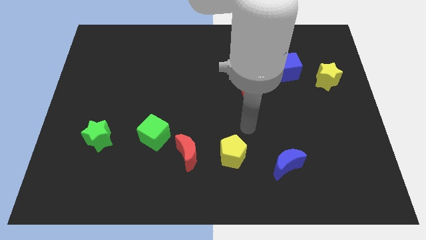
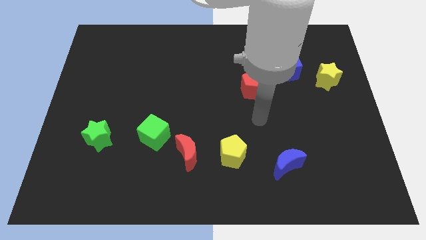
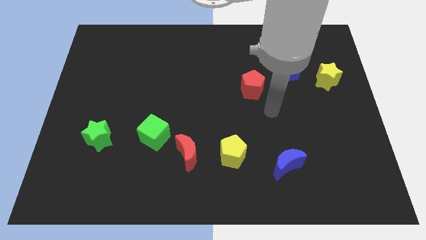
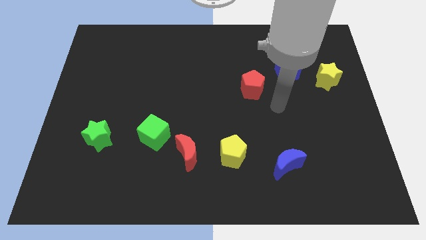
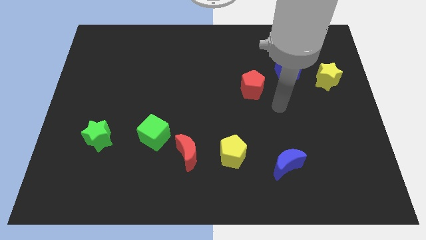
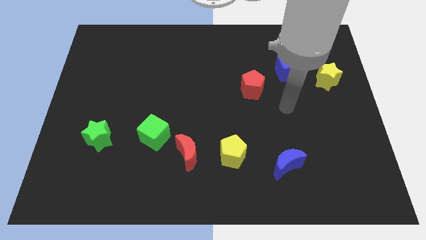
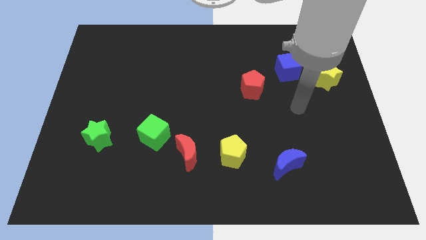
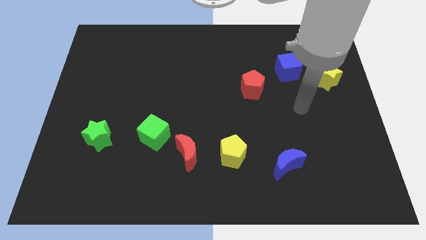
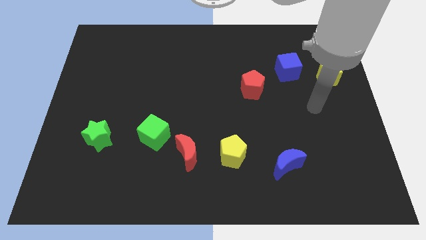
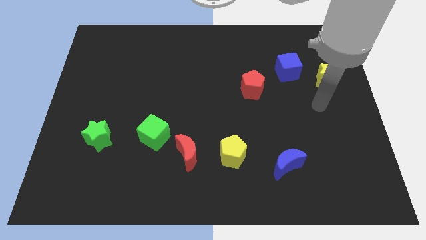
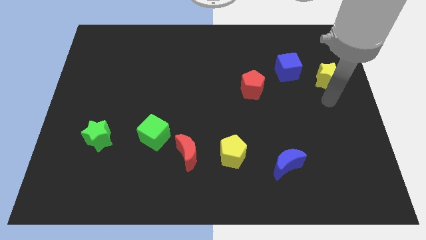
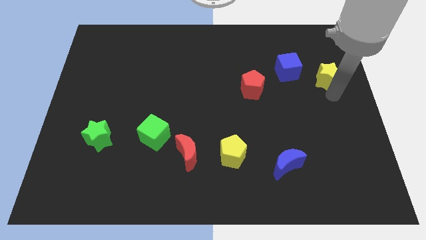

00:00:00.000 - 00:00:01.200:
move close to the yellow star

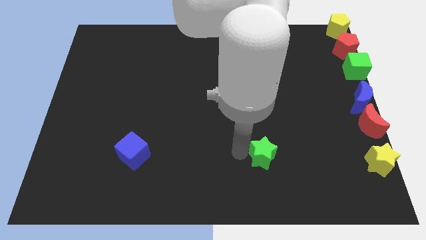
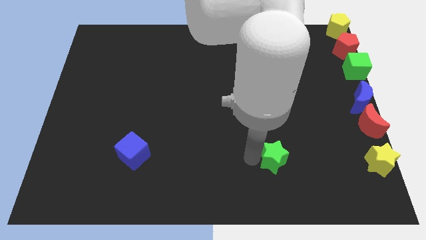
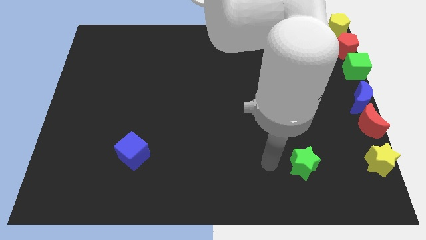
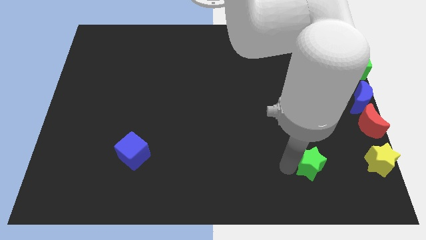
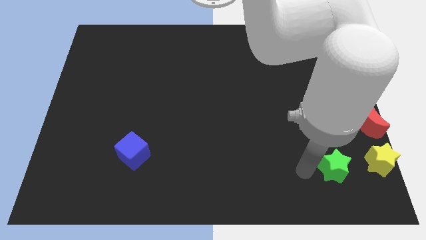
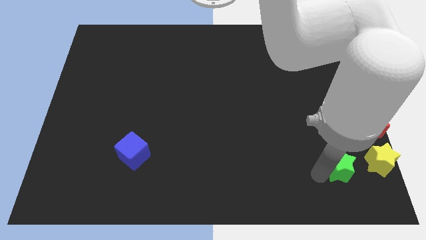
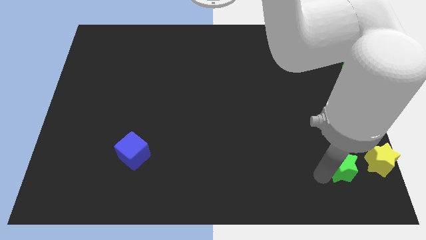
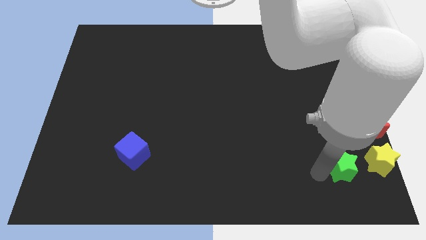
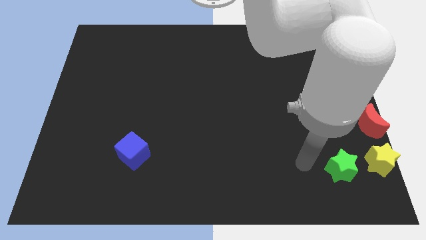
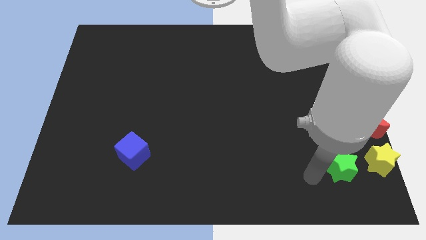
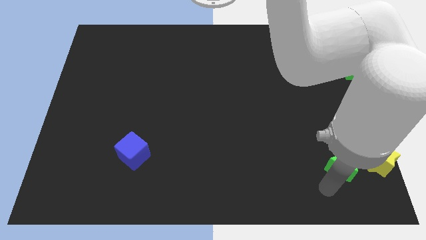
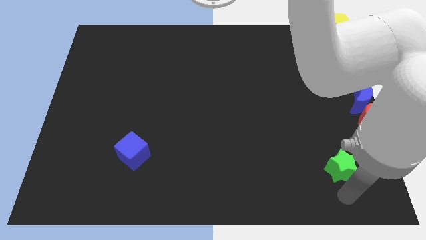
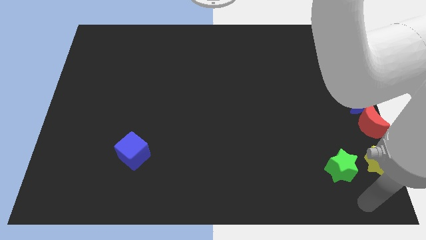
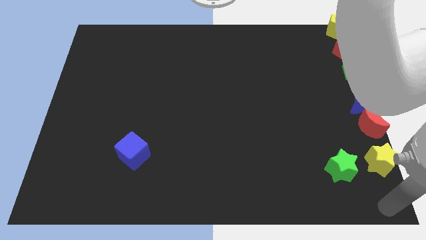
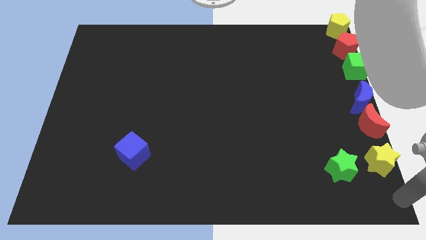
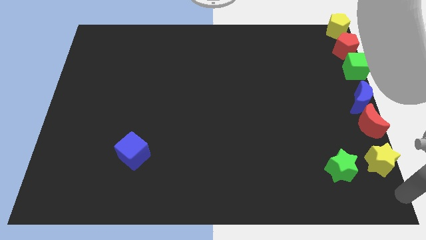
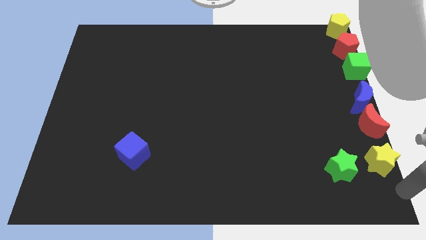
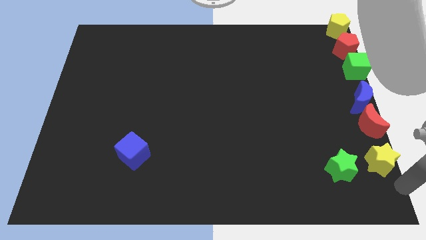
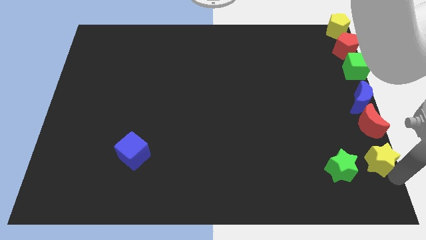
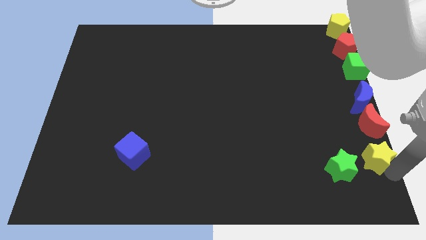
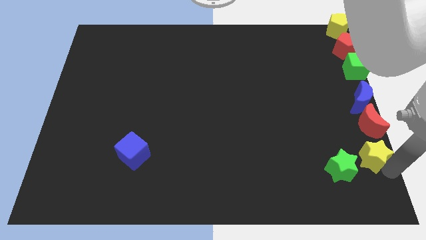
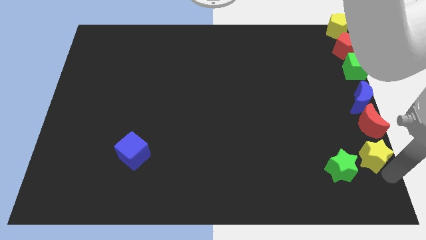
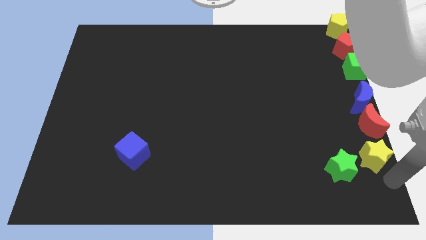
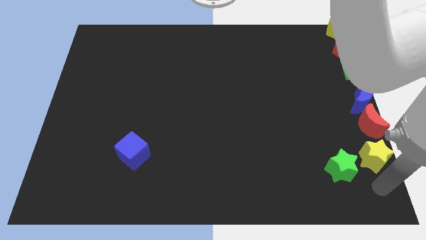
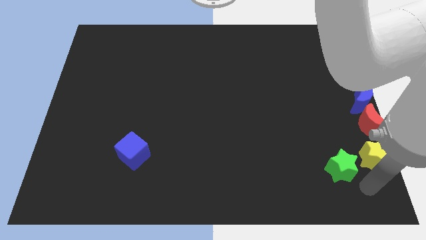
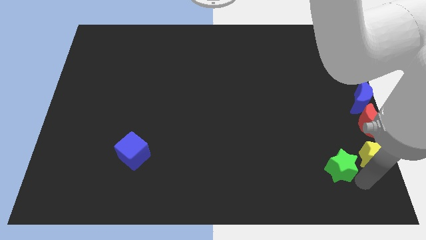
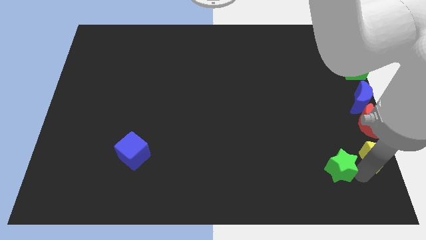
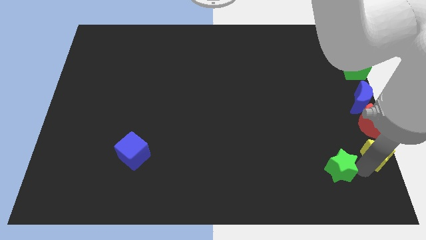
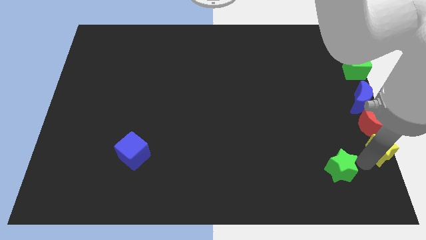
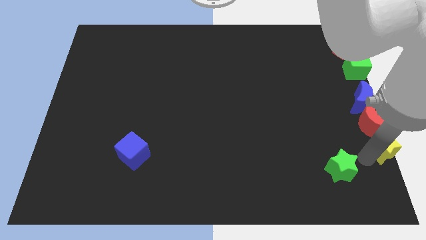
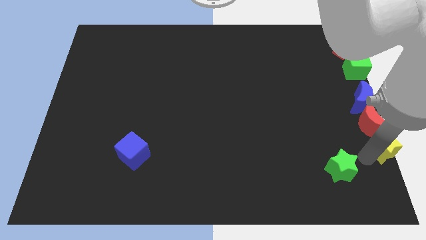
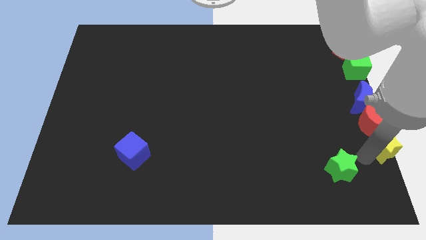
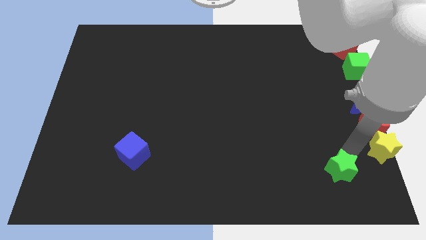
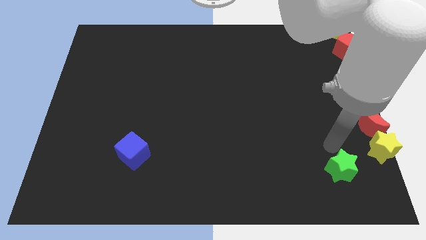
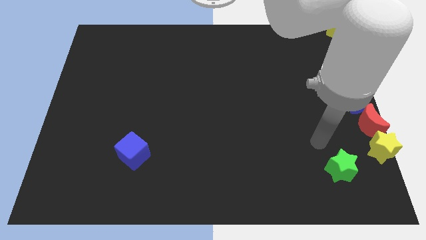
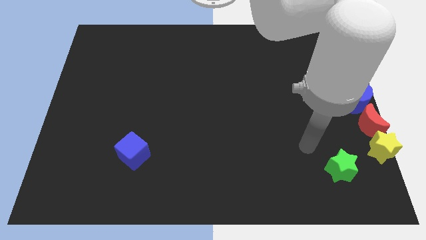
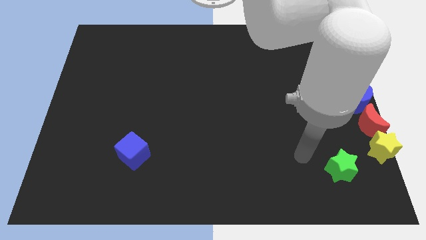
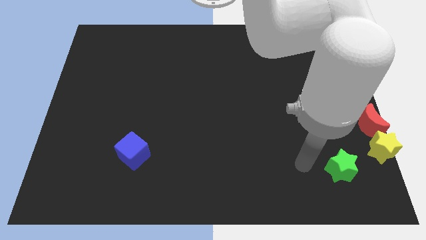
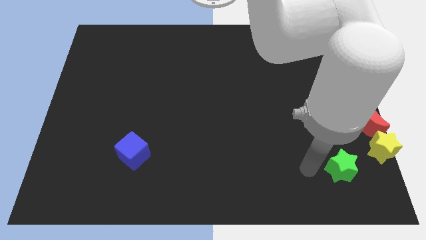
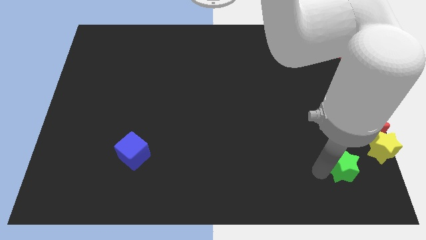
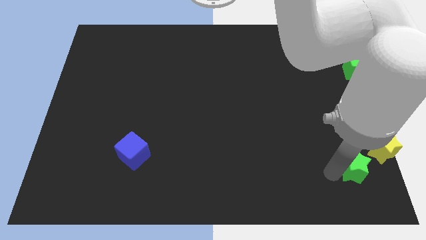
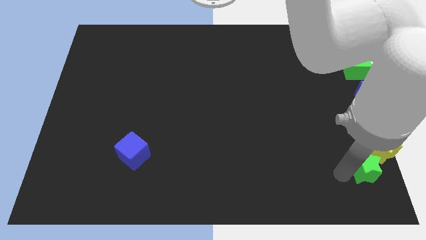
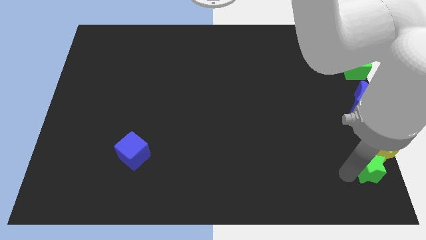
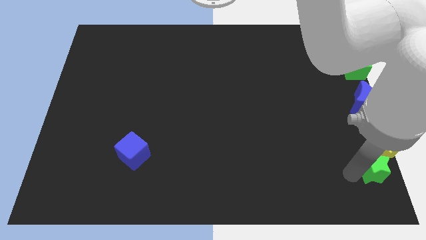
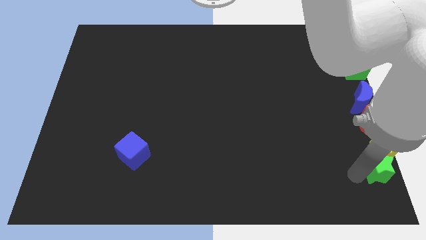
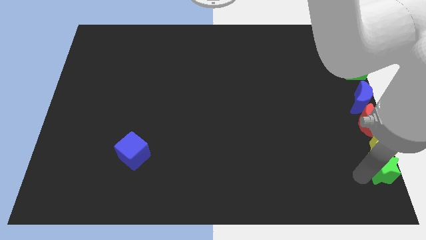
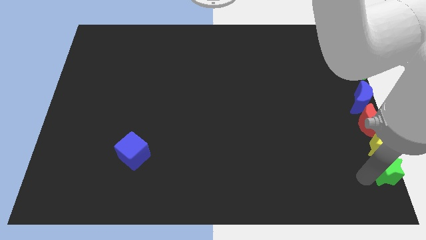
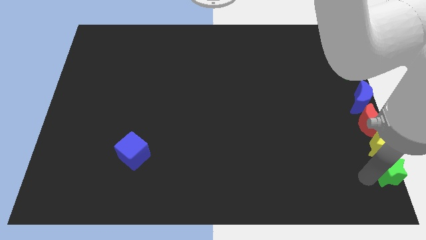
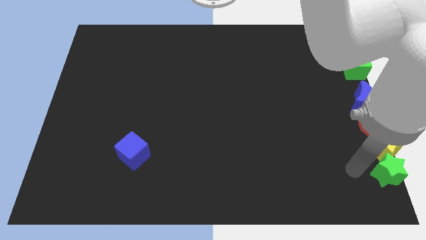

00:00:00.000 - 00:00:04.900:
place the yellow star and green star in line

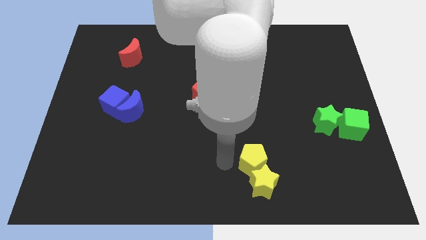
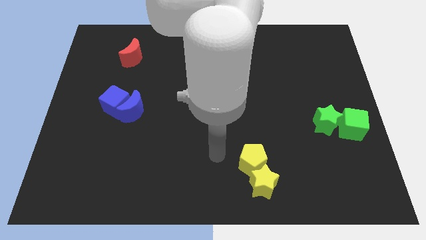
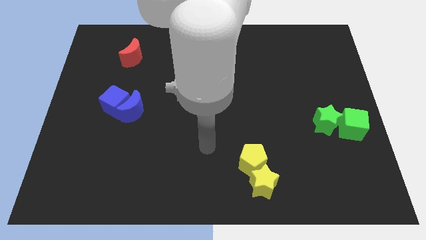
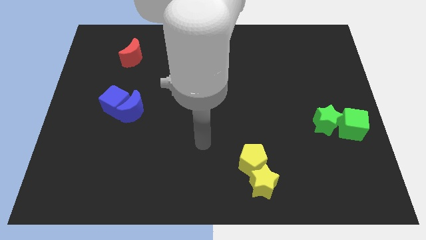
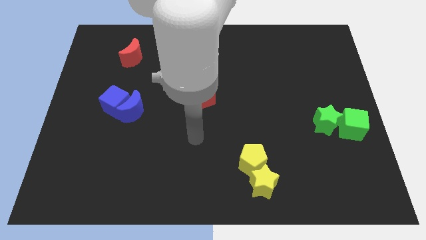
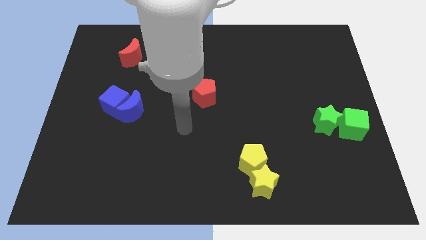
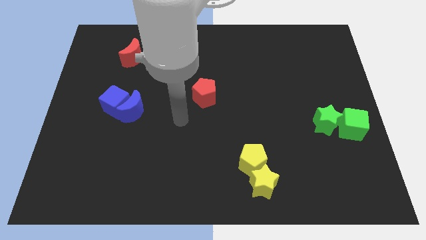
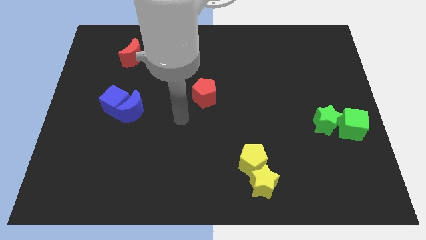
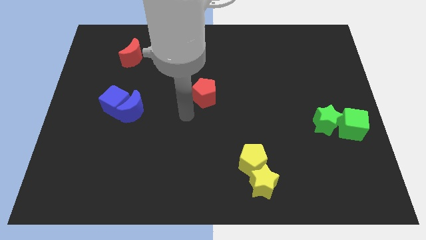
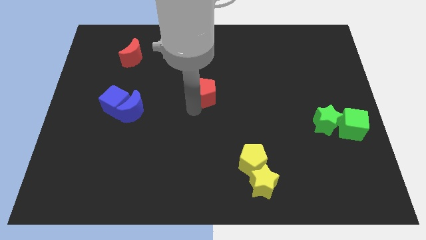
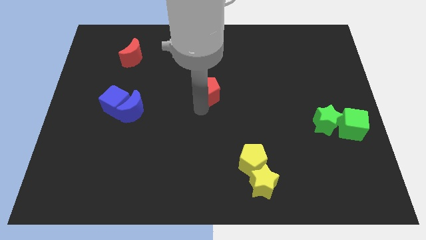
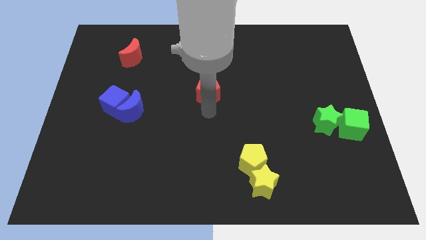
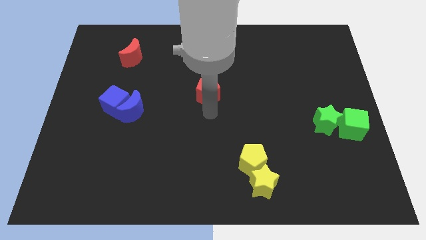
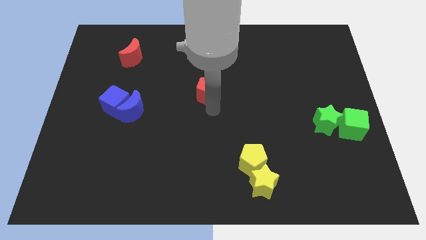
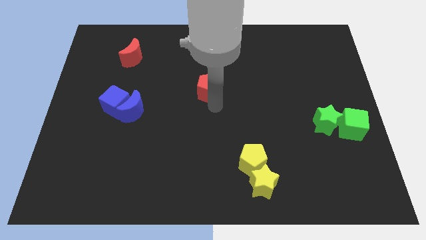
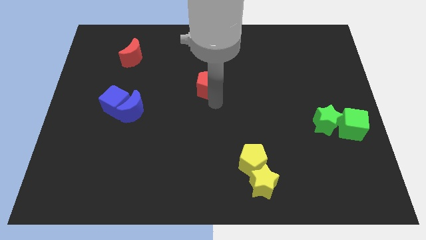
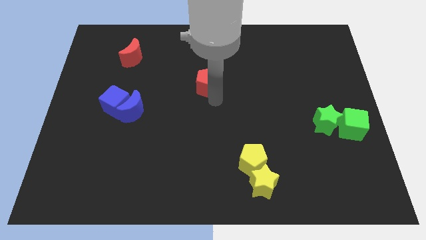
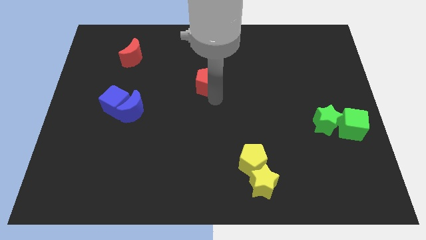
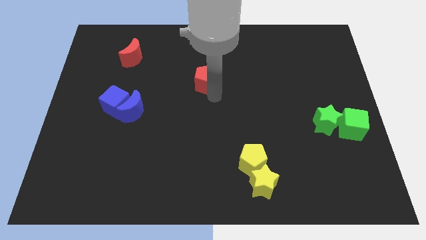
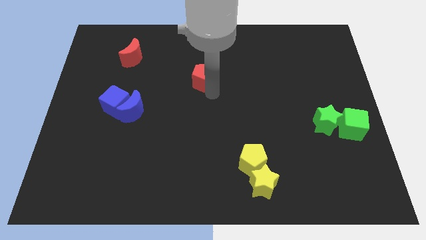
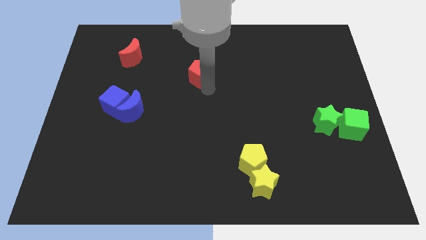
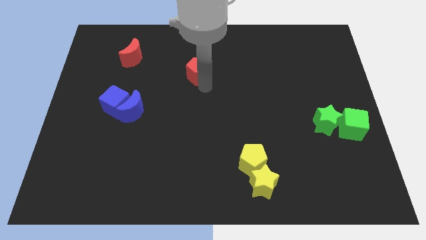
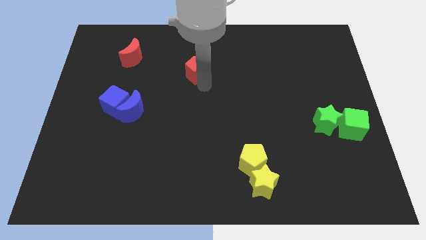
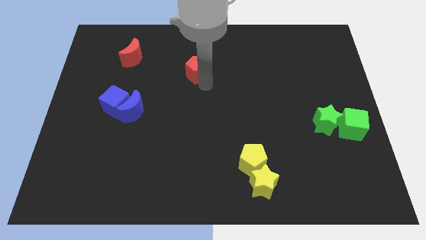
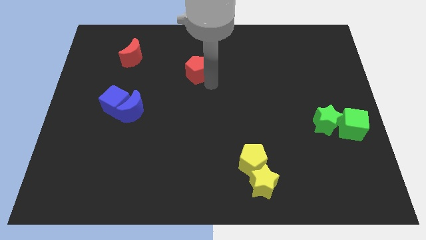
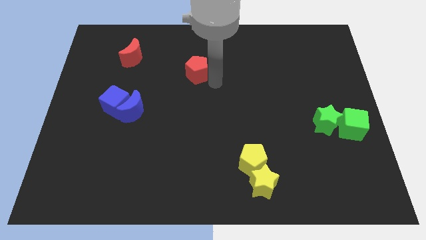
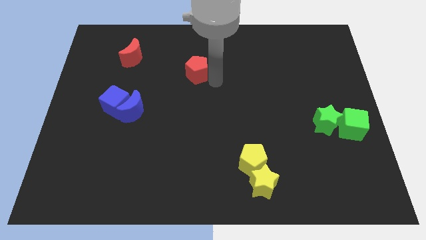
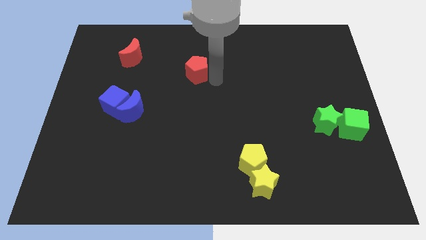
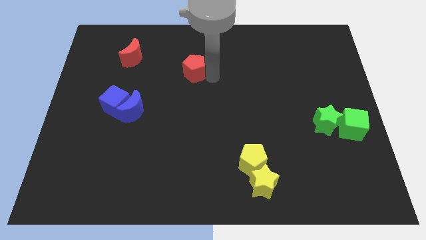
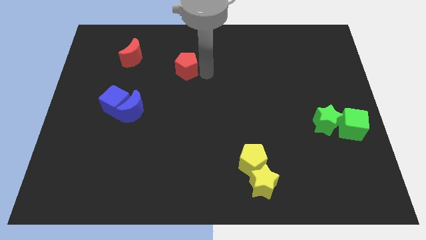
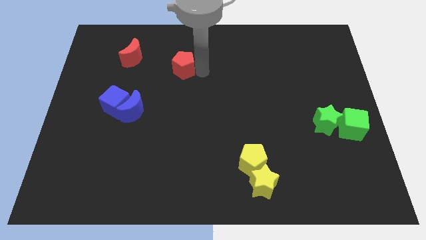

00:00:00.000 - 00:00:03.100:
move the red pentagon towards the red moon
